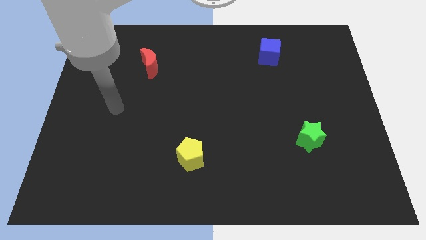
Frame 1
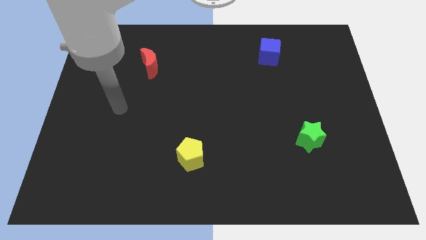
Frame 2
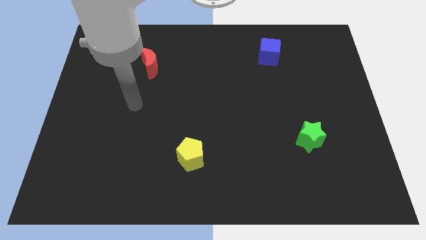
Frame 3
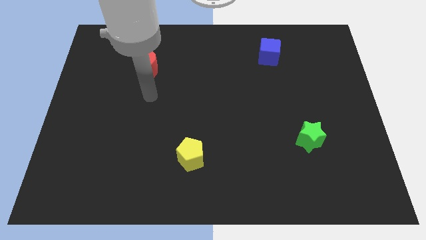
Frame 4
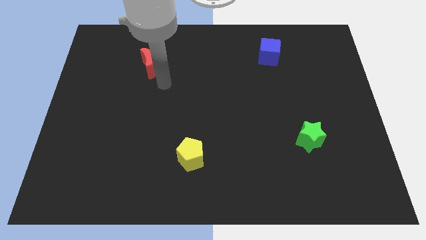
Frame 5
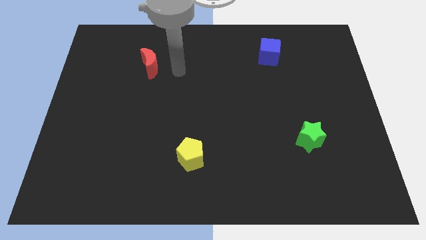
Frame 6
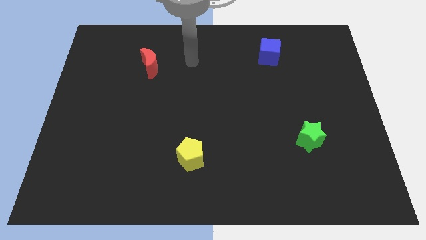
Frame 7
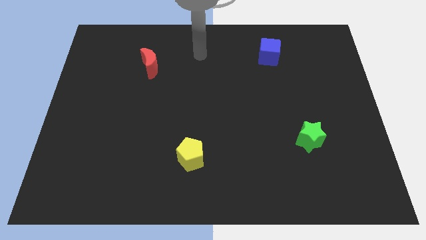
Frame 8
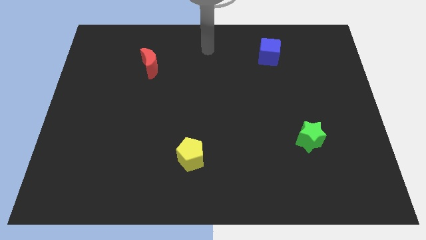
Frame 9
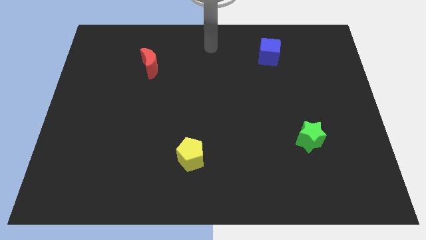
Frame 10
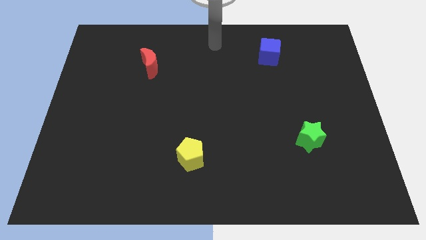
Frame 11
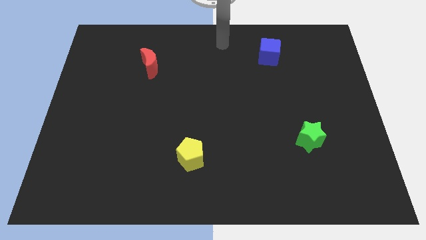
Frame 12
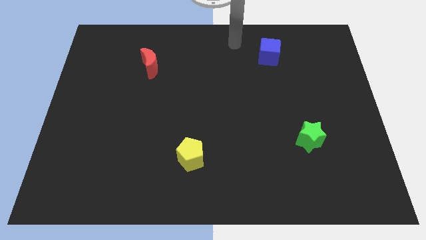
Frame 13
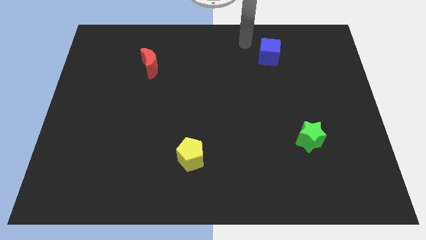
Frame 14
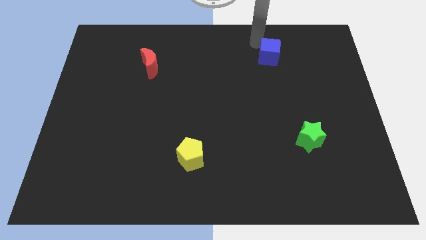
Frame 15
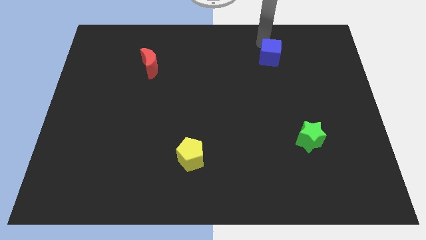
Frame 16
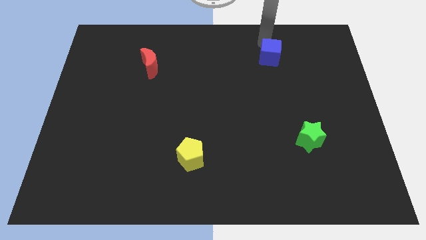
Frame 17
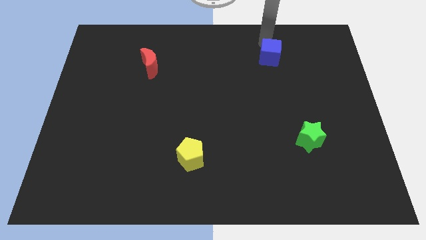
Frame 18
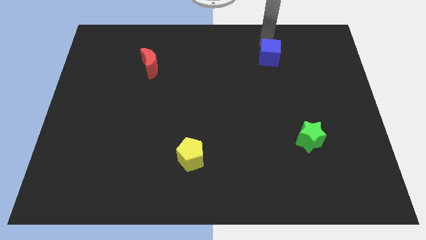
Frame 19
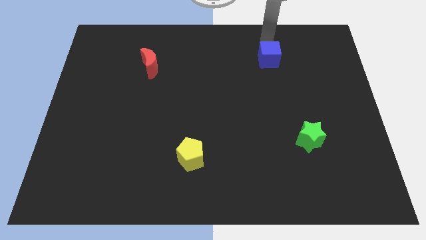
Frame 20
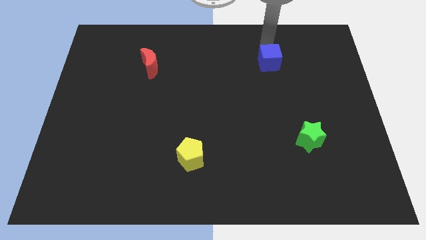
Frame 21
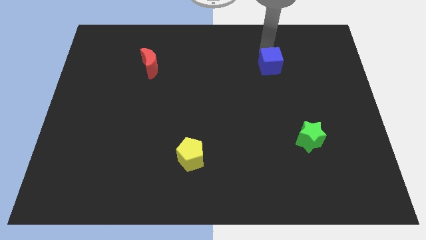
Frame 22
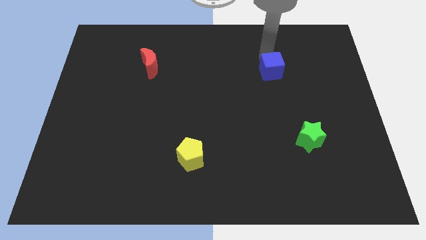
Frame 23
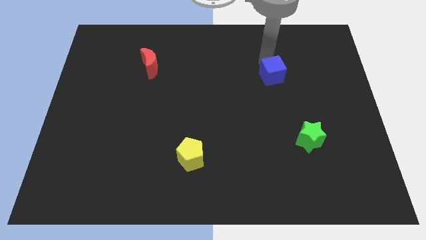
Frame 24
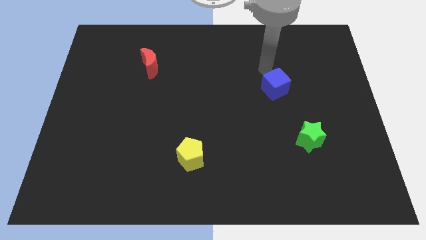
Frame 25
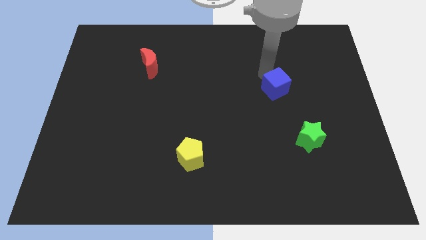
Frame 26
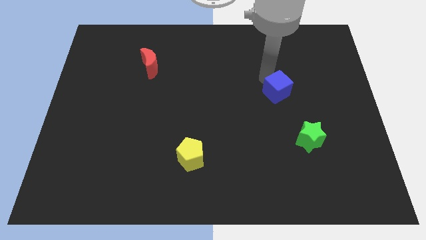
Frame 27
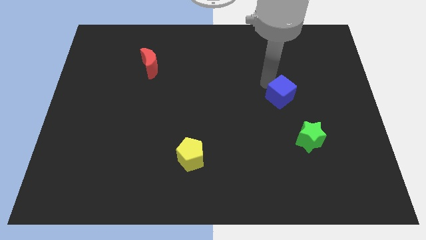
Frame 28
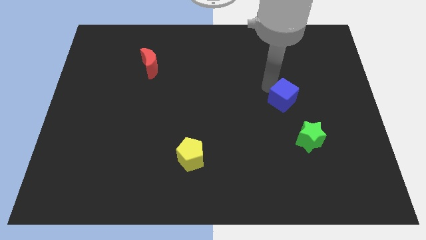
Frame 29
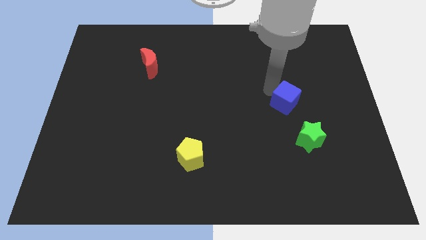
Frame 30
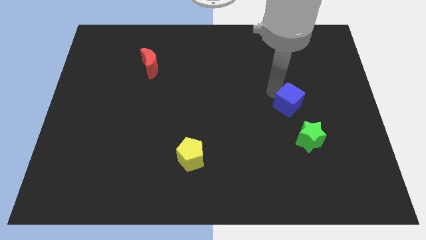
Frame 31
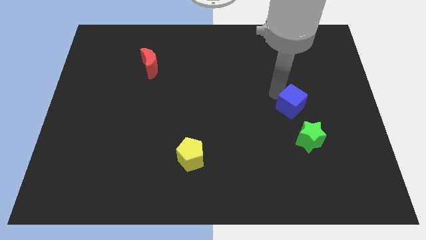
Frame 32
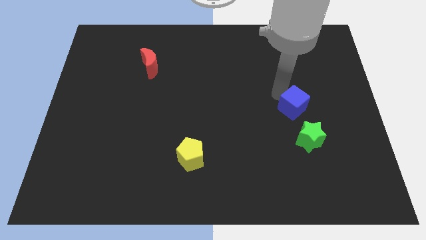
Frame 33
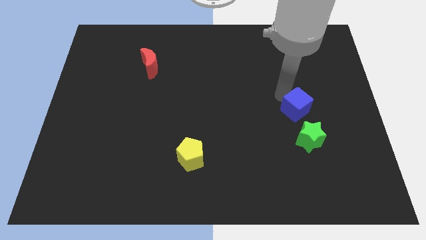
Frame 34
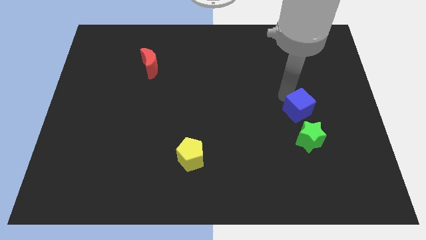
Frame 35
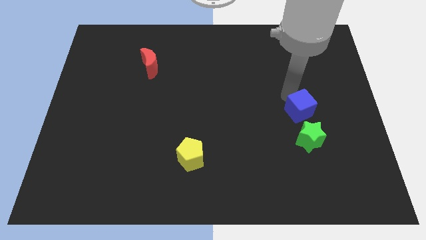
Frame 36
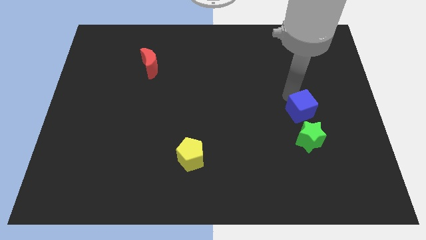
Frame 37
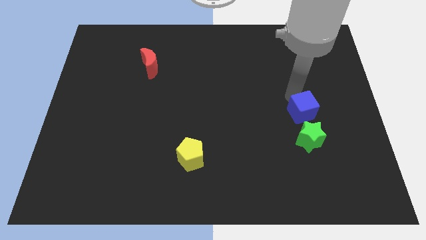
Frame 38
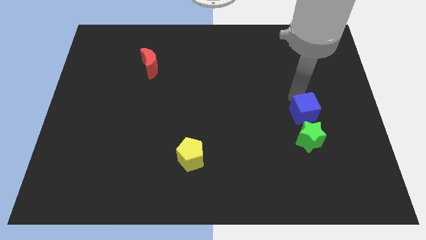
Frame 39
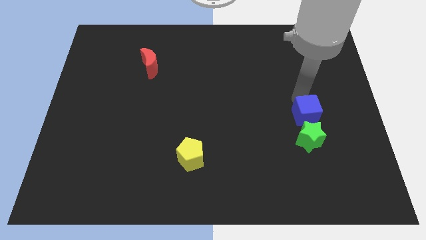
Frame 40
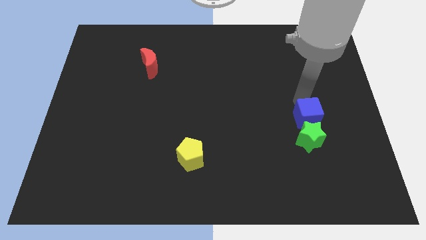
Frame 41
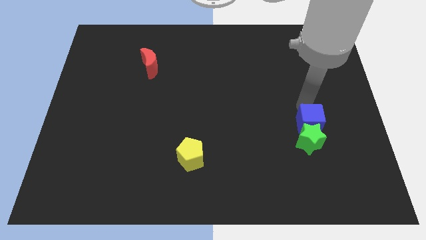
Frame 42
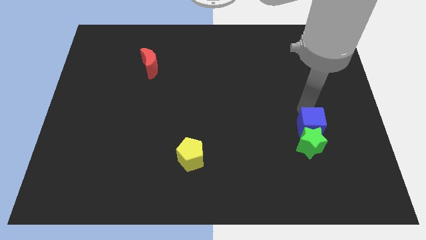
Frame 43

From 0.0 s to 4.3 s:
slide the blue cube to the star

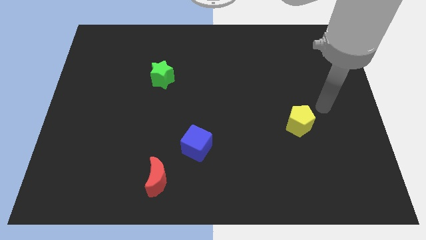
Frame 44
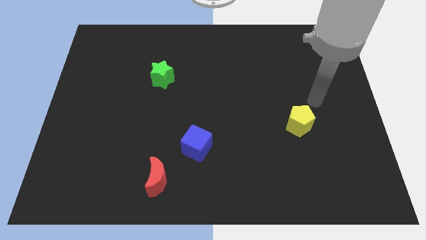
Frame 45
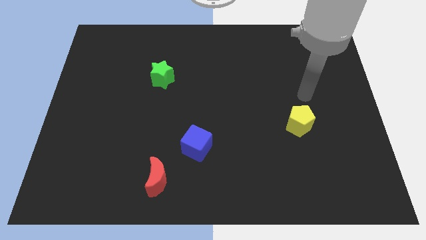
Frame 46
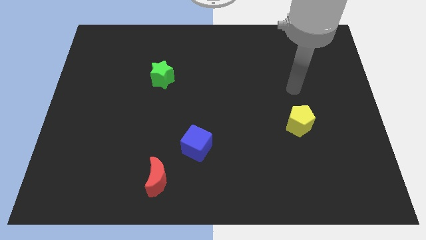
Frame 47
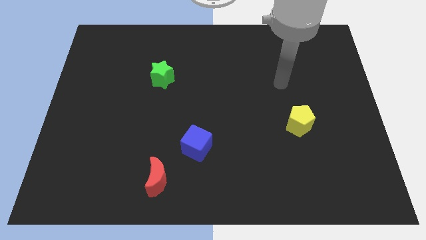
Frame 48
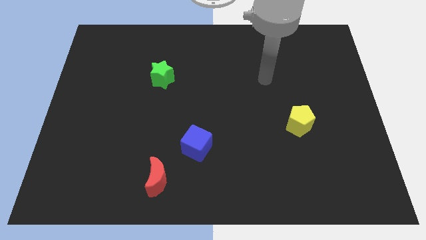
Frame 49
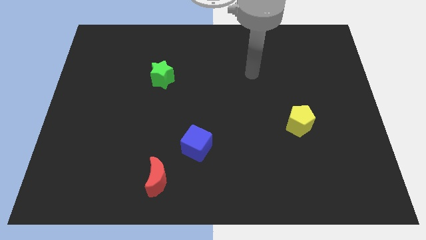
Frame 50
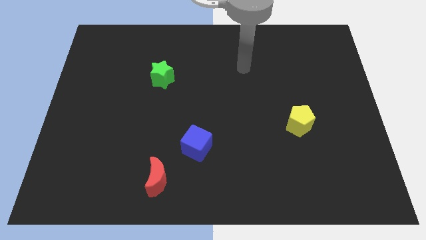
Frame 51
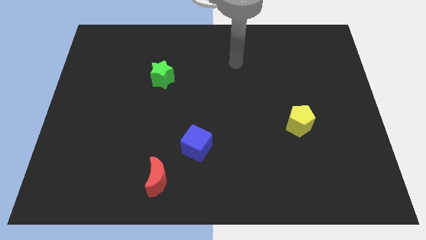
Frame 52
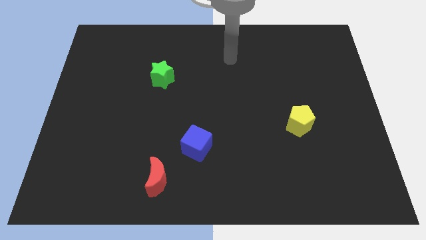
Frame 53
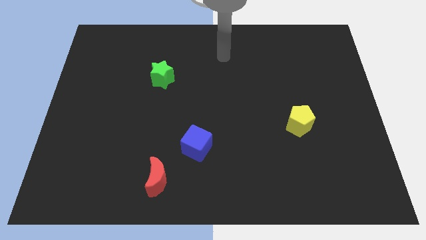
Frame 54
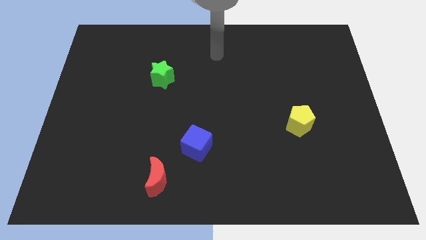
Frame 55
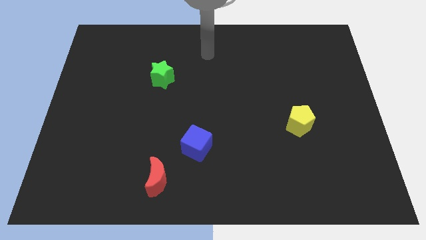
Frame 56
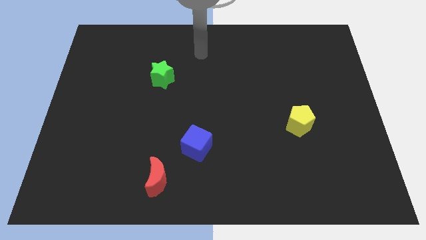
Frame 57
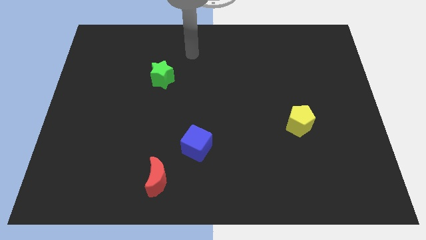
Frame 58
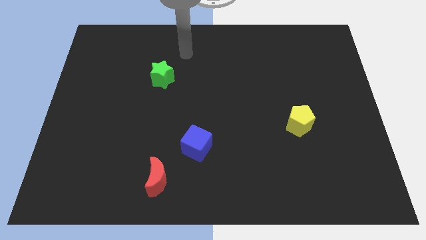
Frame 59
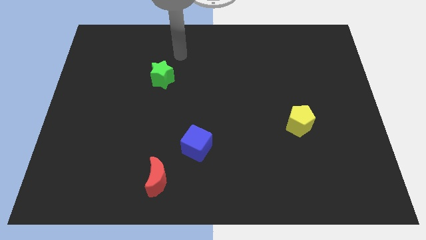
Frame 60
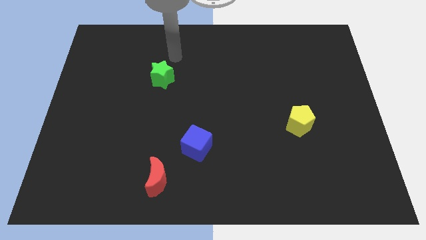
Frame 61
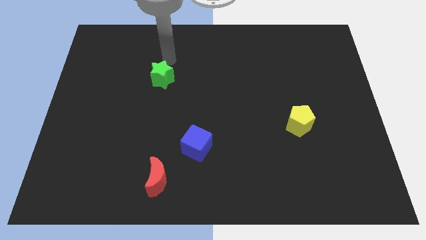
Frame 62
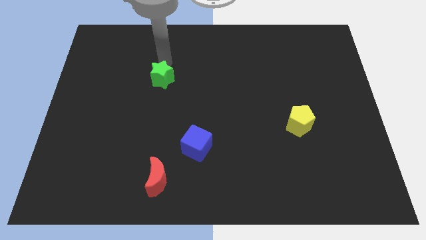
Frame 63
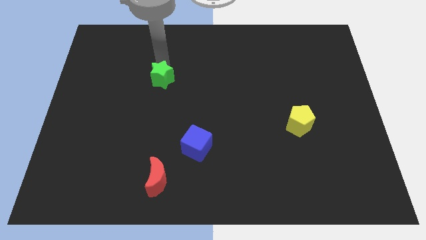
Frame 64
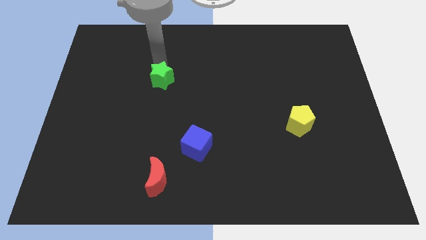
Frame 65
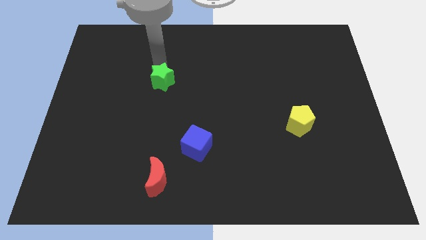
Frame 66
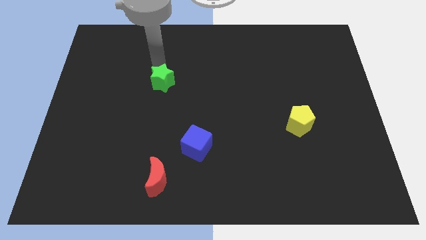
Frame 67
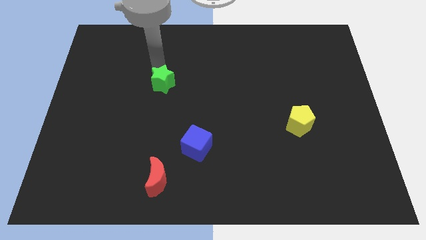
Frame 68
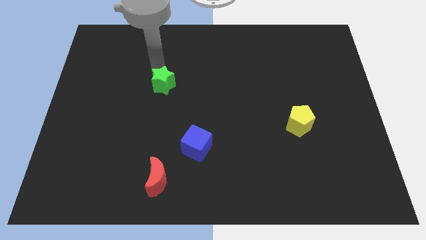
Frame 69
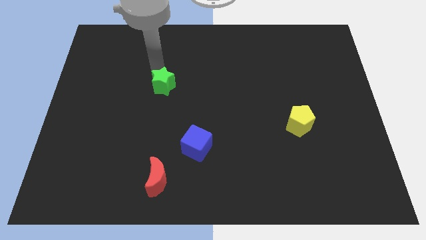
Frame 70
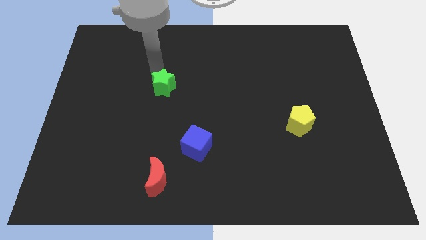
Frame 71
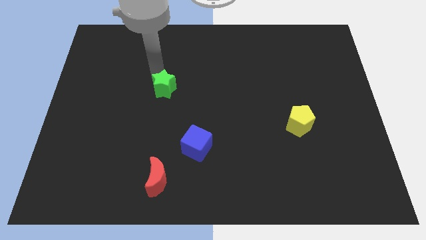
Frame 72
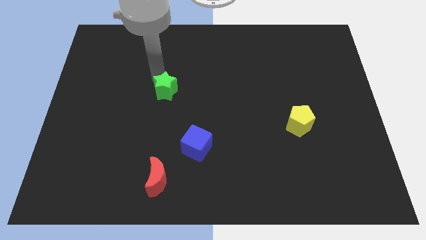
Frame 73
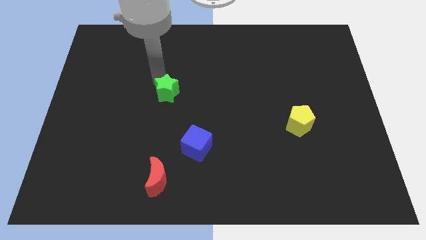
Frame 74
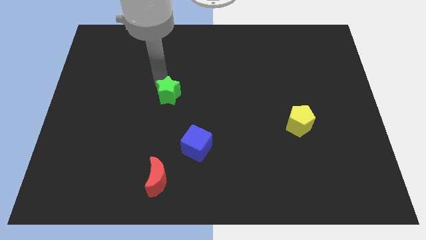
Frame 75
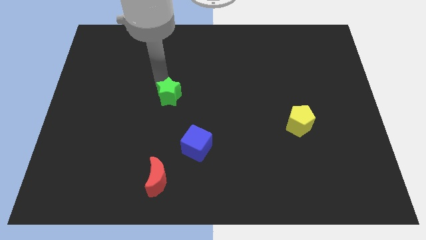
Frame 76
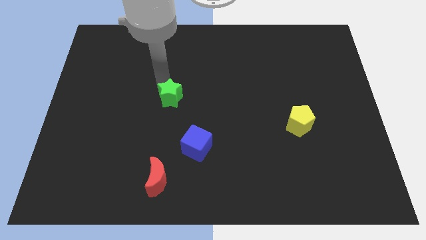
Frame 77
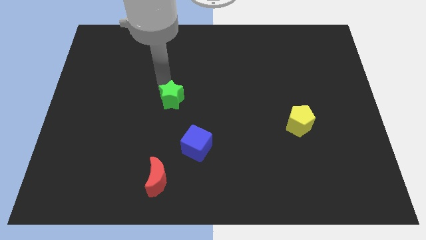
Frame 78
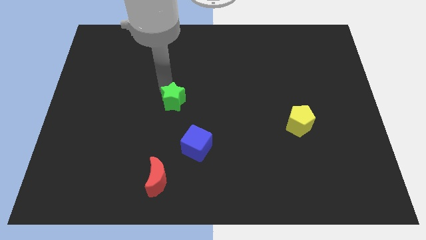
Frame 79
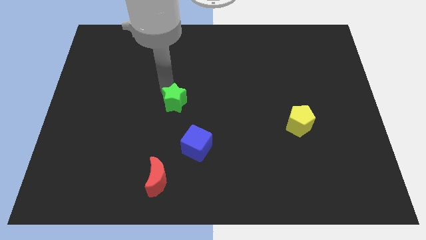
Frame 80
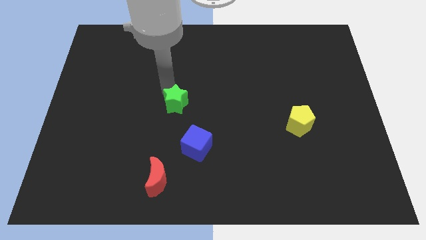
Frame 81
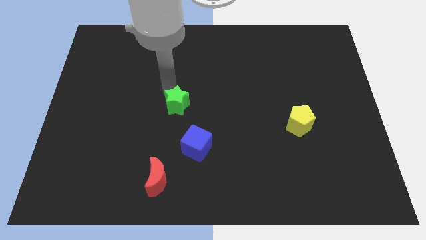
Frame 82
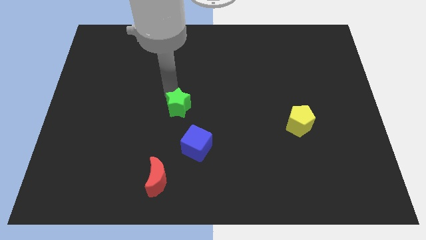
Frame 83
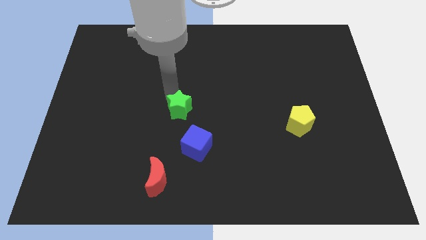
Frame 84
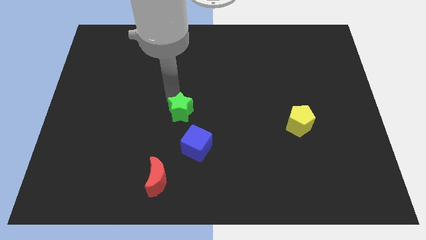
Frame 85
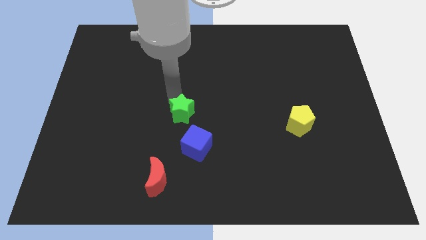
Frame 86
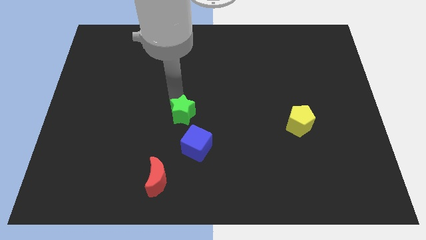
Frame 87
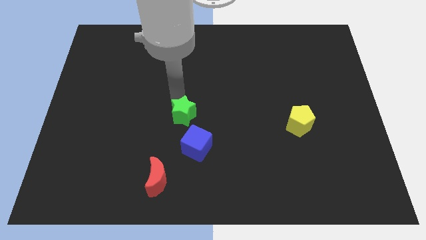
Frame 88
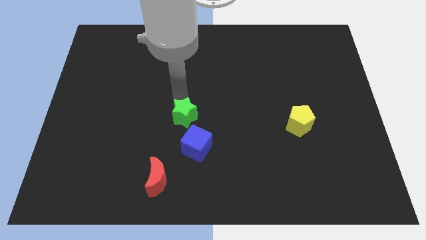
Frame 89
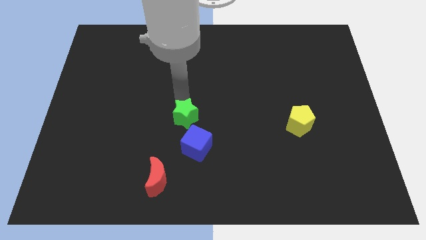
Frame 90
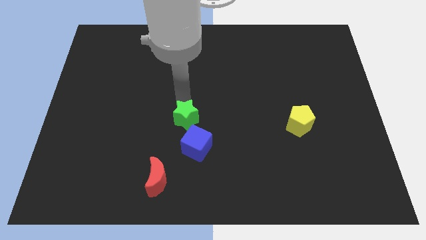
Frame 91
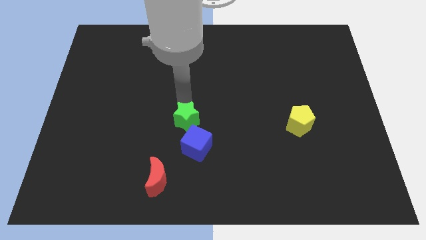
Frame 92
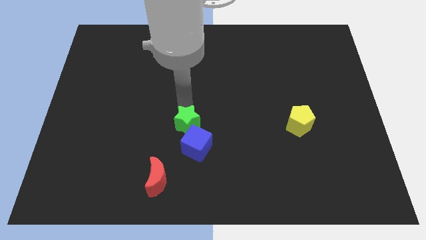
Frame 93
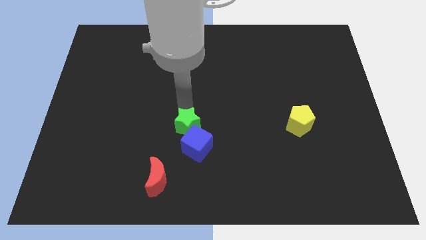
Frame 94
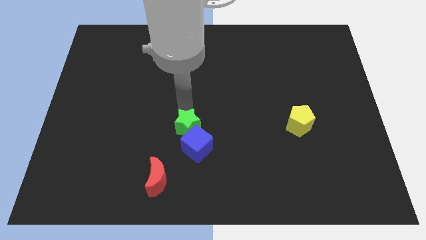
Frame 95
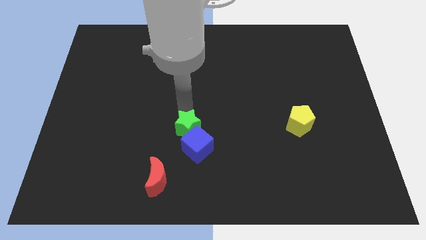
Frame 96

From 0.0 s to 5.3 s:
put the star close to the blue cube
